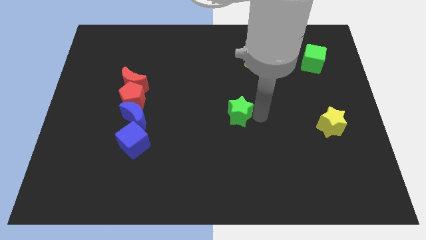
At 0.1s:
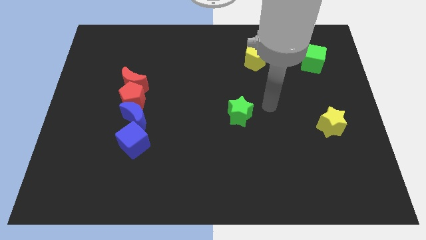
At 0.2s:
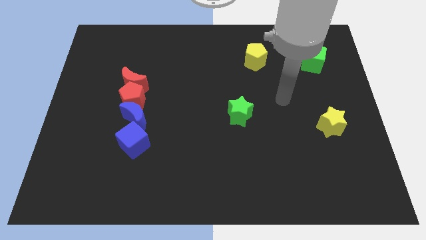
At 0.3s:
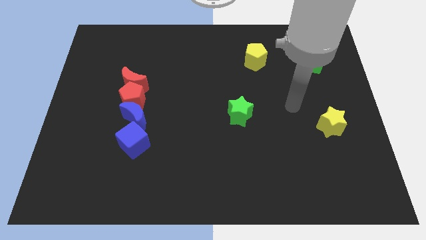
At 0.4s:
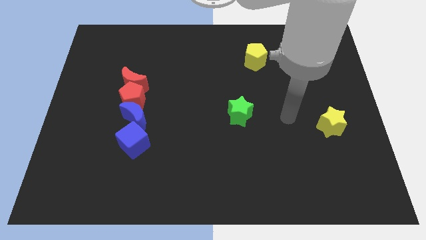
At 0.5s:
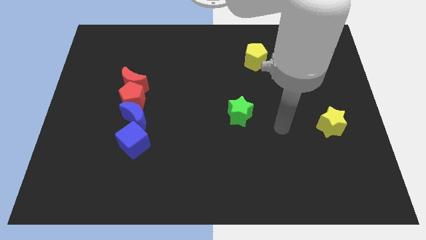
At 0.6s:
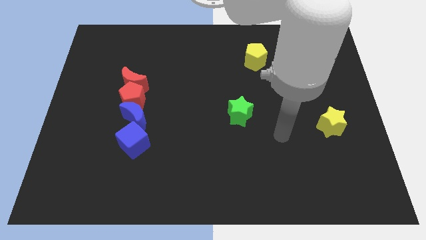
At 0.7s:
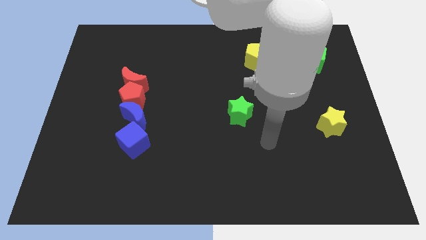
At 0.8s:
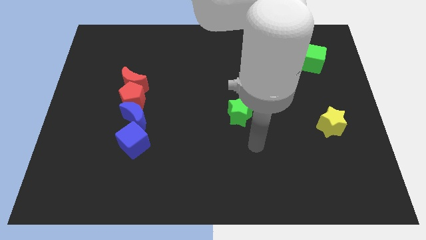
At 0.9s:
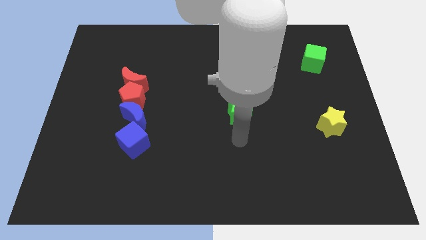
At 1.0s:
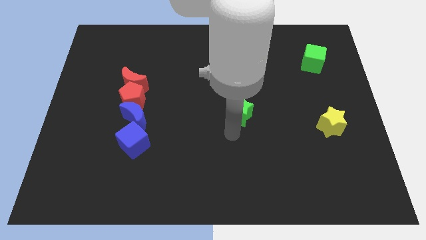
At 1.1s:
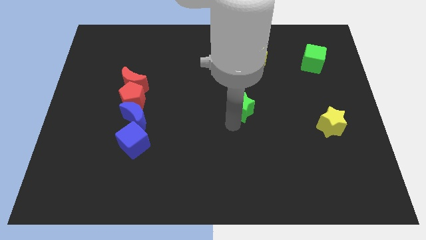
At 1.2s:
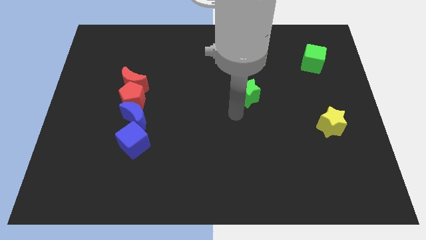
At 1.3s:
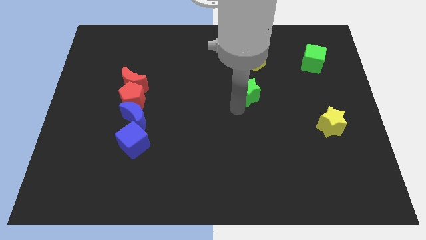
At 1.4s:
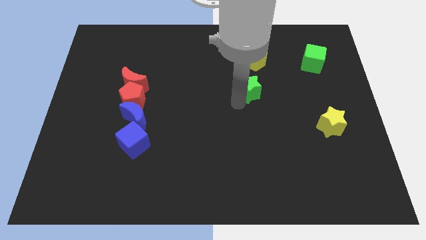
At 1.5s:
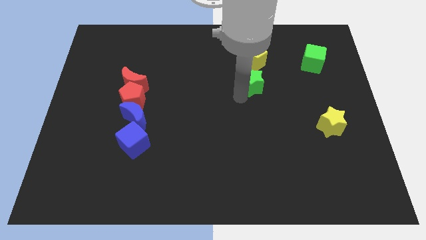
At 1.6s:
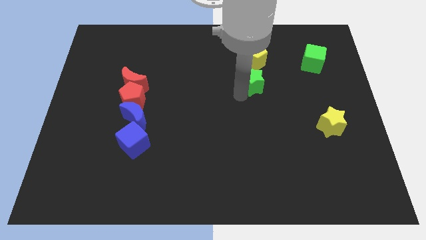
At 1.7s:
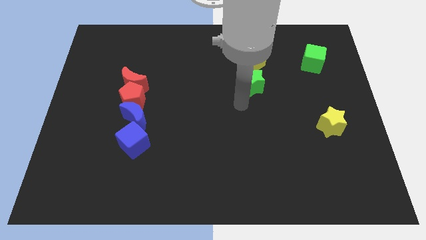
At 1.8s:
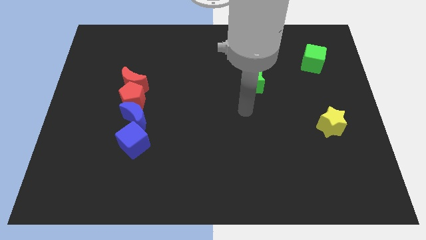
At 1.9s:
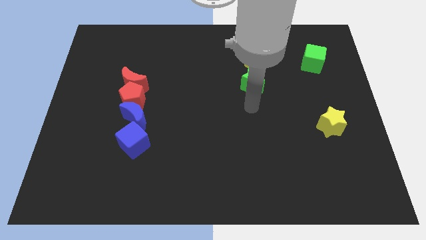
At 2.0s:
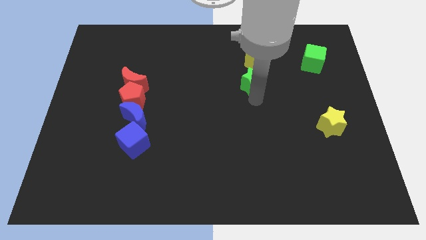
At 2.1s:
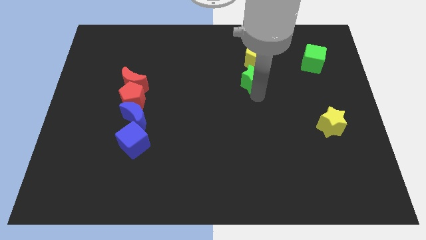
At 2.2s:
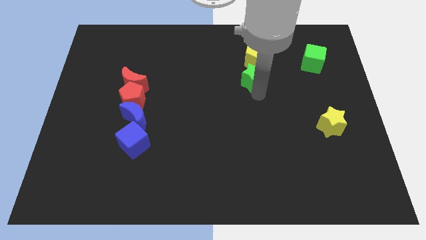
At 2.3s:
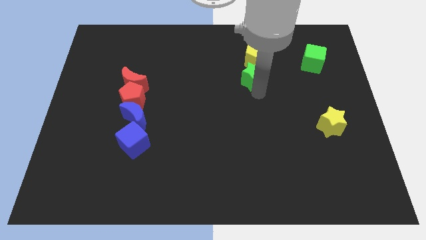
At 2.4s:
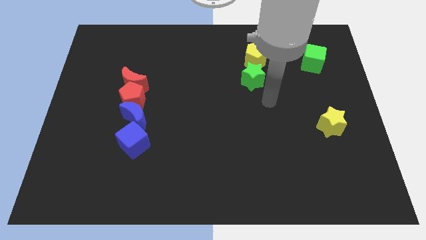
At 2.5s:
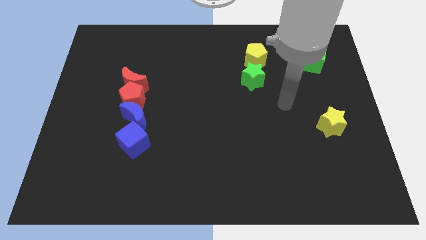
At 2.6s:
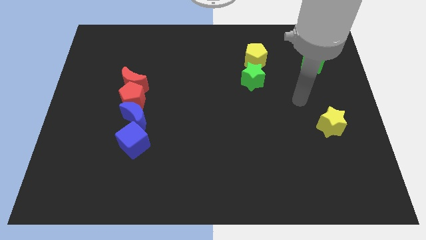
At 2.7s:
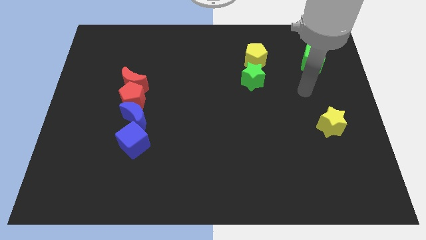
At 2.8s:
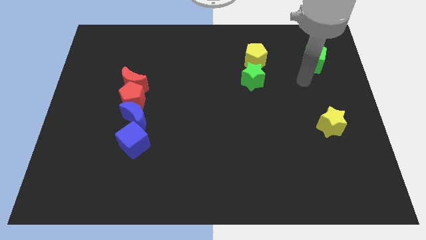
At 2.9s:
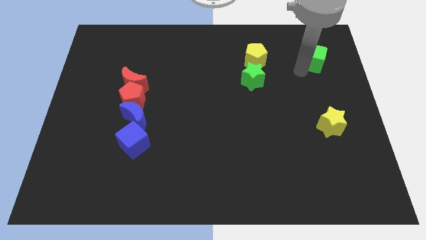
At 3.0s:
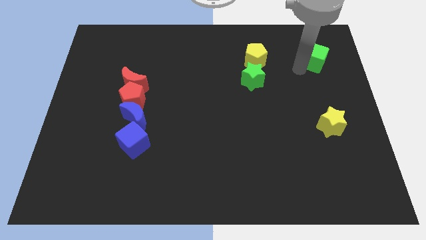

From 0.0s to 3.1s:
place the green star under the yellow pentagon

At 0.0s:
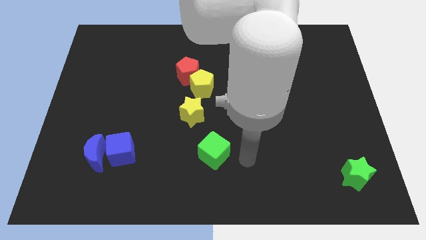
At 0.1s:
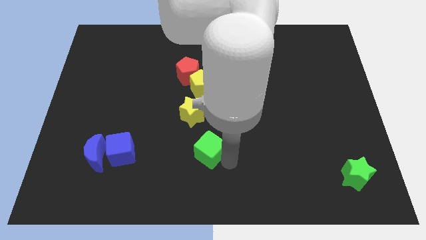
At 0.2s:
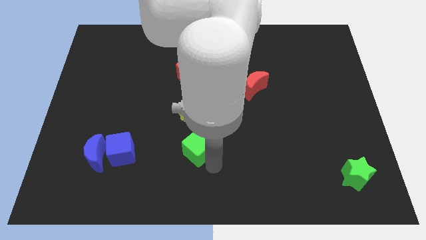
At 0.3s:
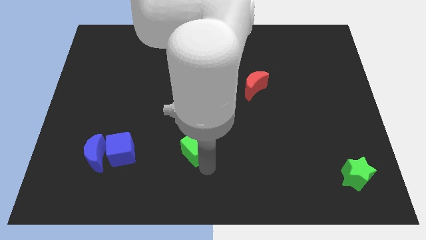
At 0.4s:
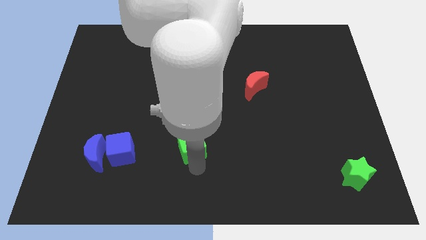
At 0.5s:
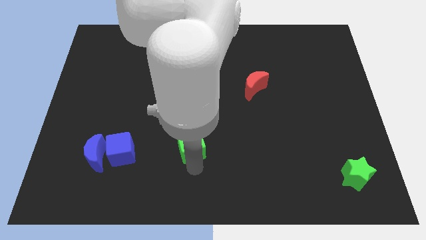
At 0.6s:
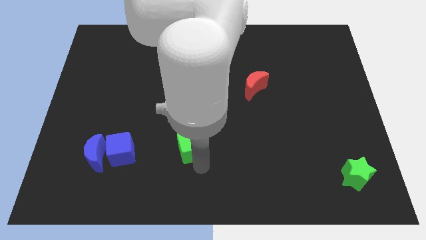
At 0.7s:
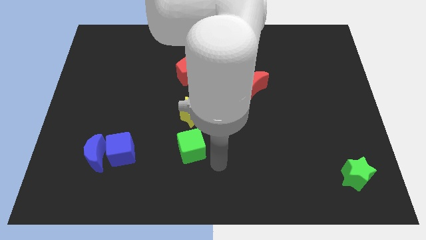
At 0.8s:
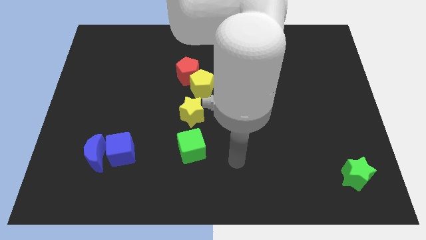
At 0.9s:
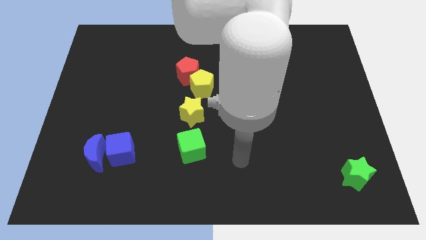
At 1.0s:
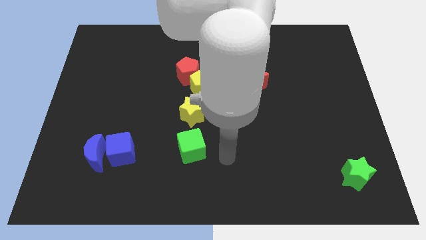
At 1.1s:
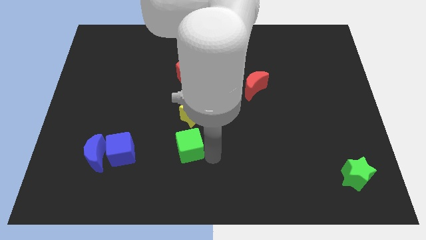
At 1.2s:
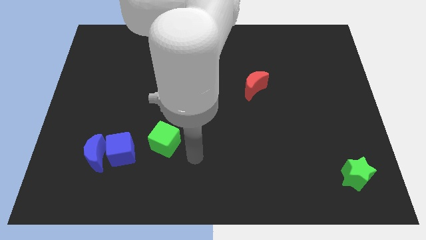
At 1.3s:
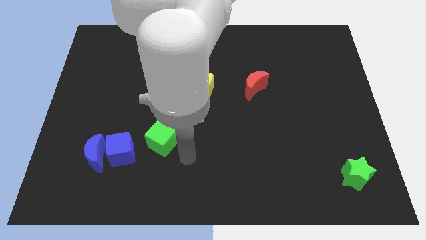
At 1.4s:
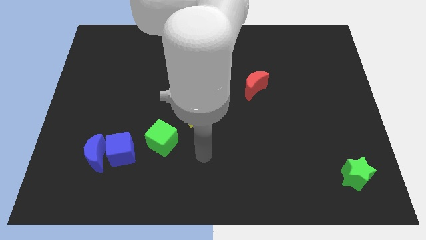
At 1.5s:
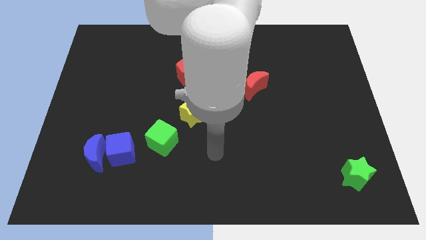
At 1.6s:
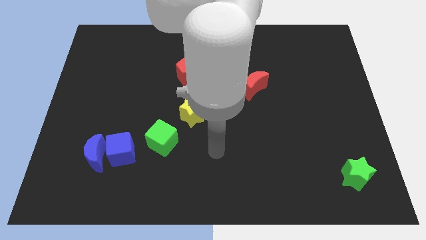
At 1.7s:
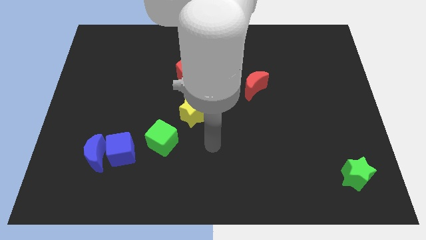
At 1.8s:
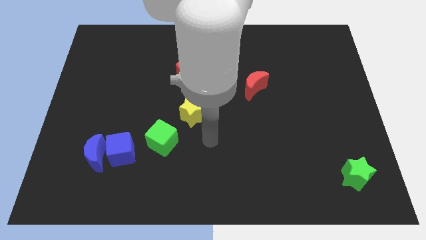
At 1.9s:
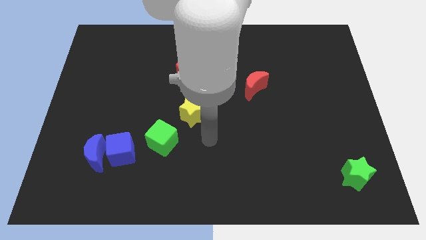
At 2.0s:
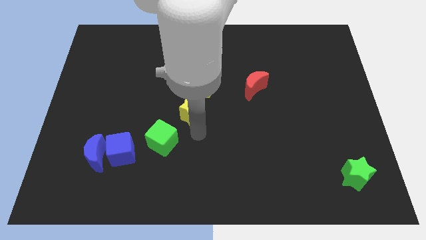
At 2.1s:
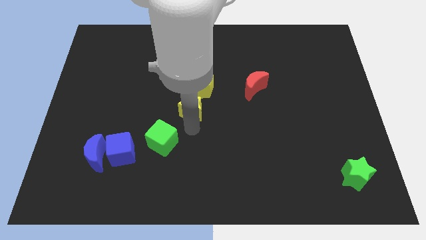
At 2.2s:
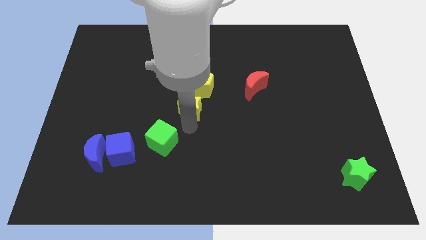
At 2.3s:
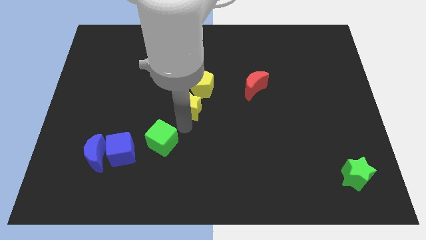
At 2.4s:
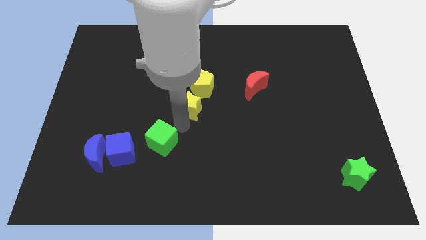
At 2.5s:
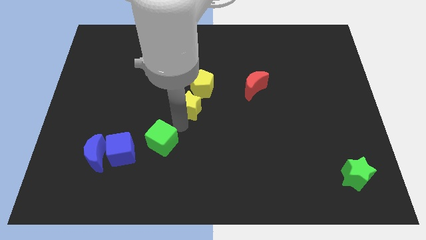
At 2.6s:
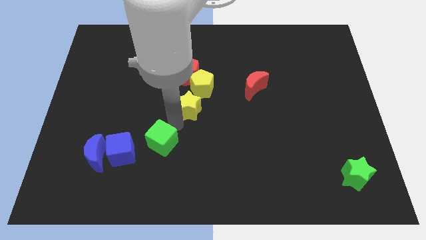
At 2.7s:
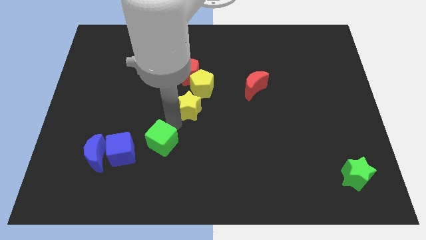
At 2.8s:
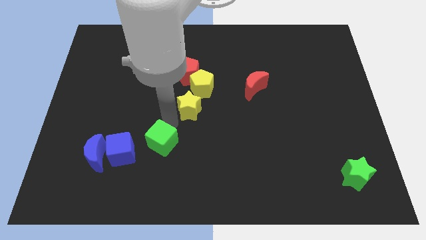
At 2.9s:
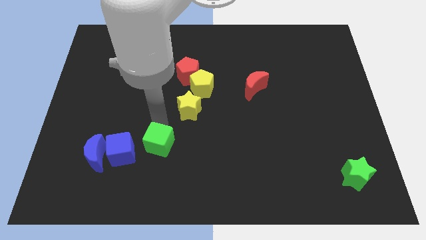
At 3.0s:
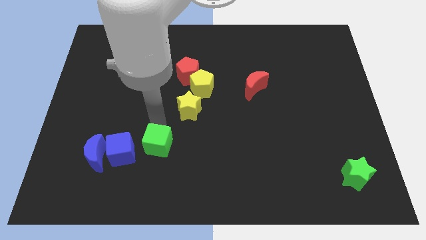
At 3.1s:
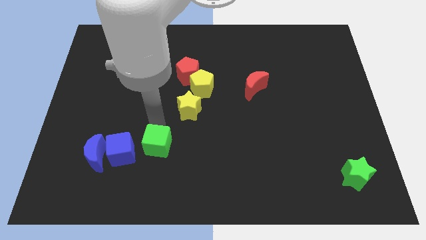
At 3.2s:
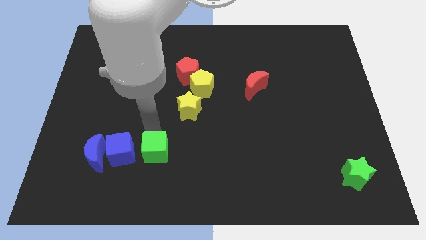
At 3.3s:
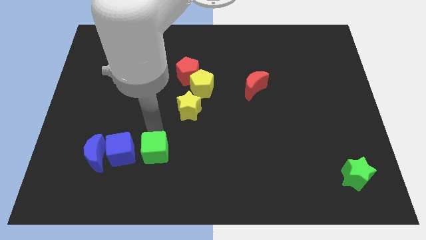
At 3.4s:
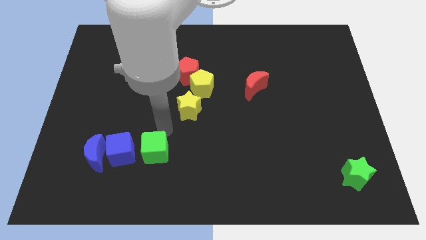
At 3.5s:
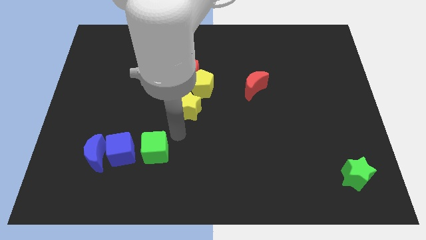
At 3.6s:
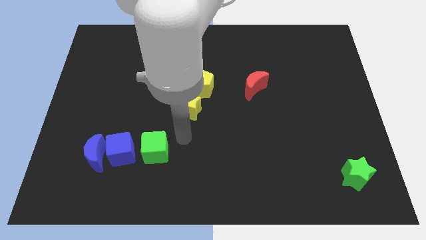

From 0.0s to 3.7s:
move the green cube right to the blue cube

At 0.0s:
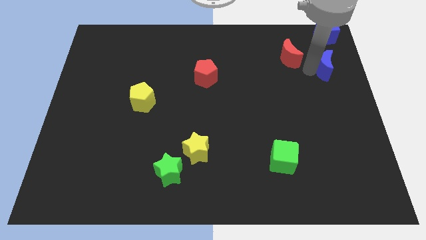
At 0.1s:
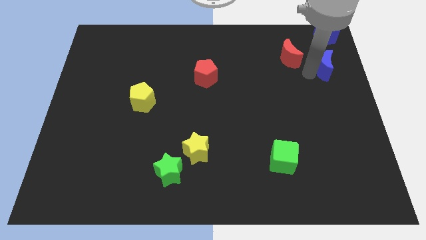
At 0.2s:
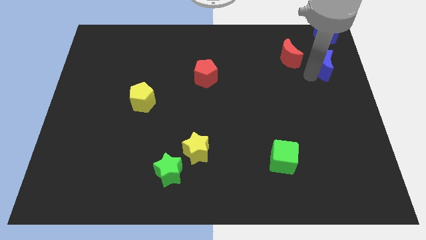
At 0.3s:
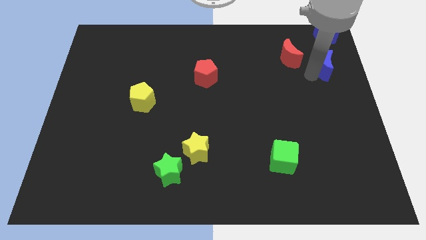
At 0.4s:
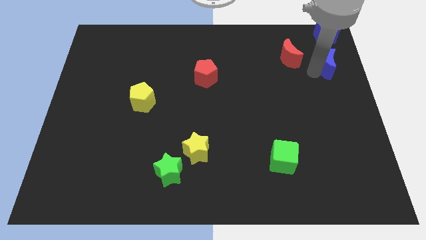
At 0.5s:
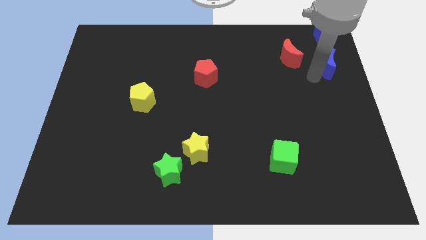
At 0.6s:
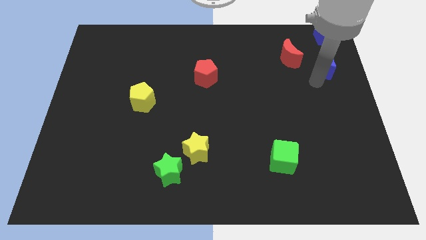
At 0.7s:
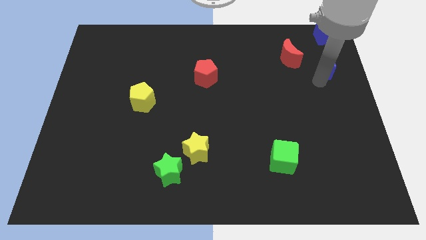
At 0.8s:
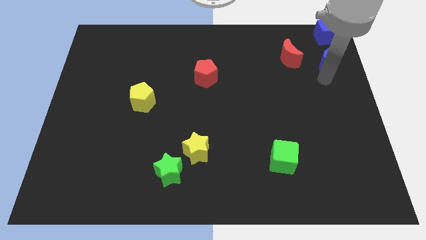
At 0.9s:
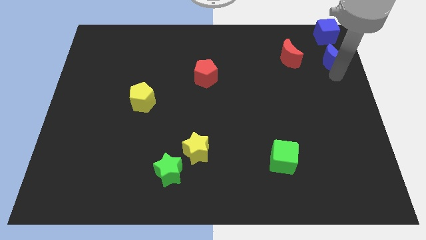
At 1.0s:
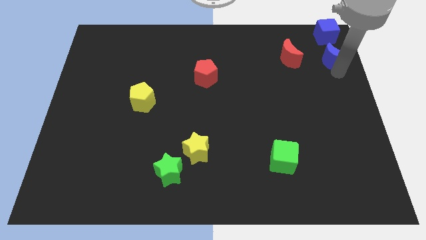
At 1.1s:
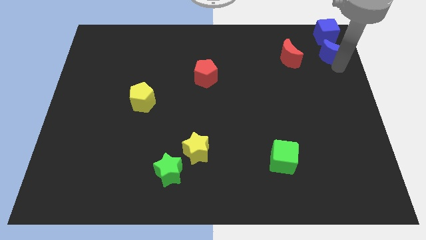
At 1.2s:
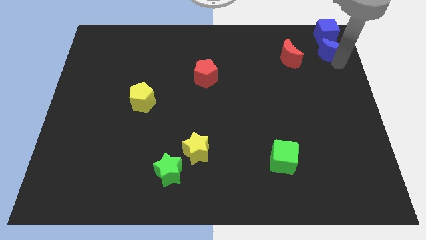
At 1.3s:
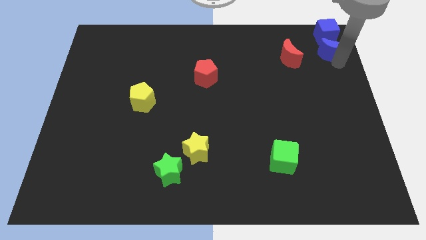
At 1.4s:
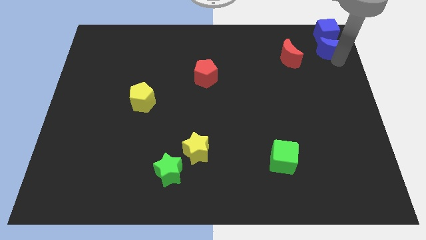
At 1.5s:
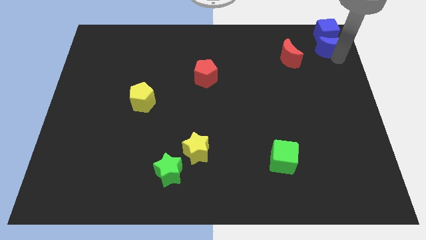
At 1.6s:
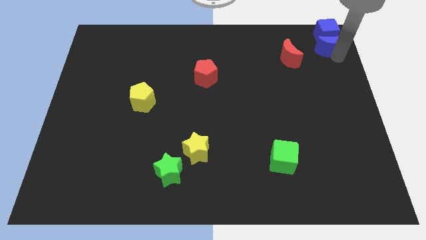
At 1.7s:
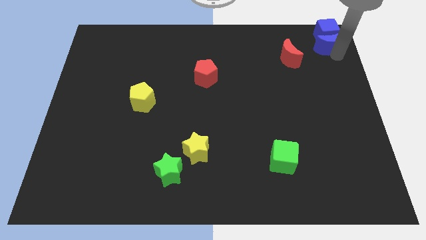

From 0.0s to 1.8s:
place the blue moon down to the blue cube

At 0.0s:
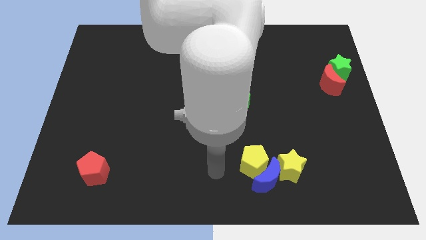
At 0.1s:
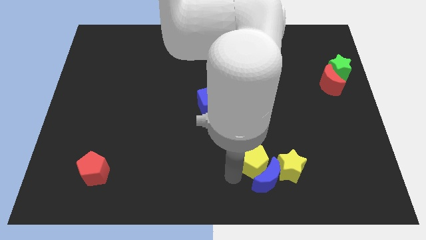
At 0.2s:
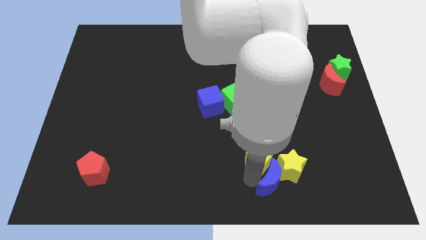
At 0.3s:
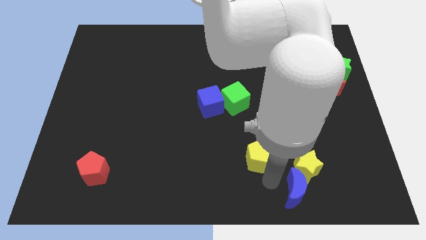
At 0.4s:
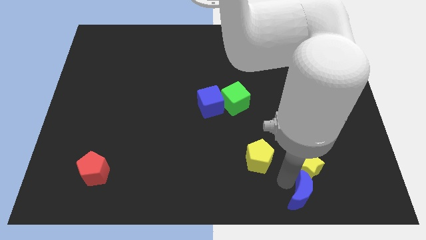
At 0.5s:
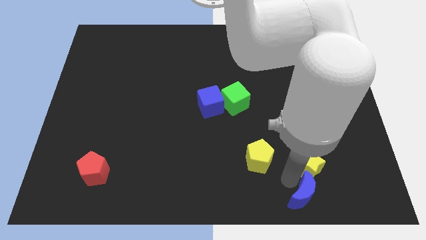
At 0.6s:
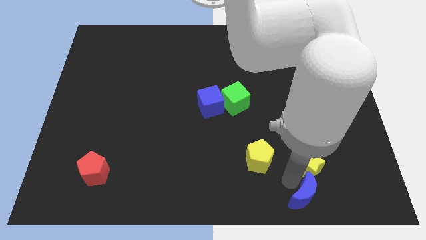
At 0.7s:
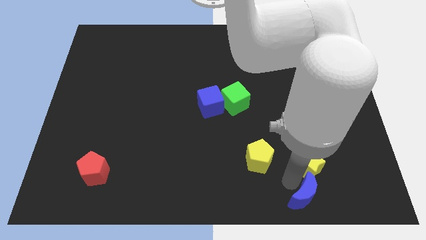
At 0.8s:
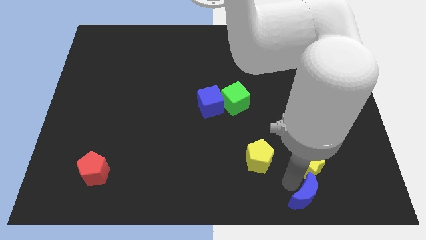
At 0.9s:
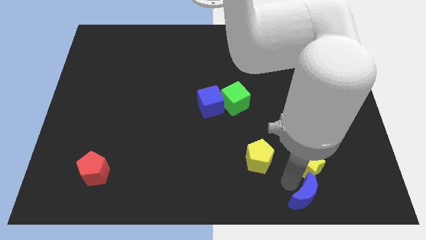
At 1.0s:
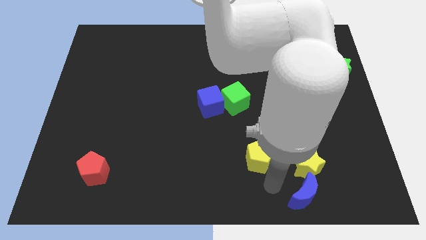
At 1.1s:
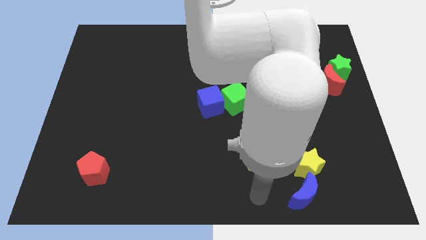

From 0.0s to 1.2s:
separate blue crescent from the yellow pentagon
